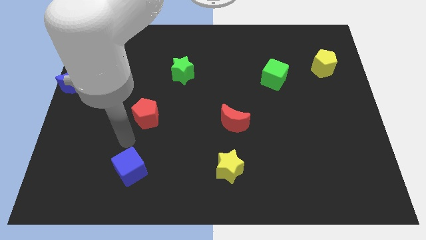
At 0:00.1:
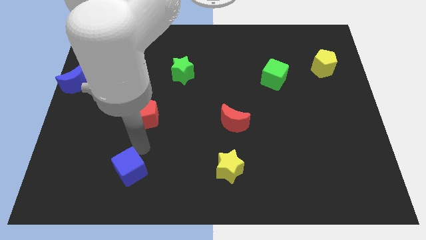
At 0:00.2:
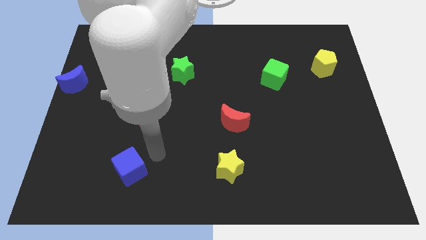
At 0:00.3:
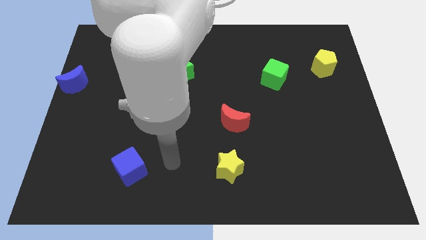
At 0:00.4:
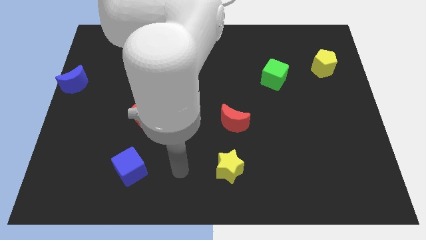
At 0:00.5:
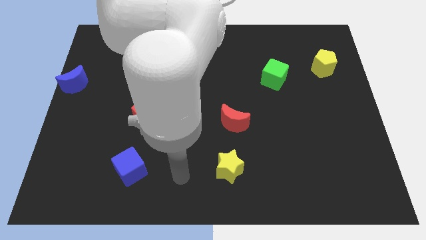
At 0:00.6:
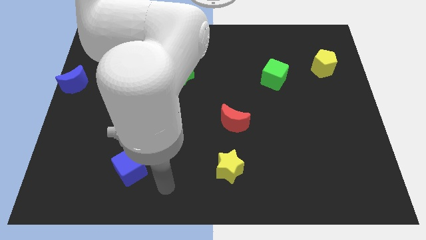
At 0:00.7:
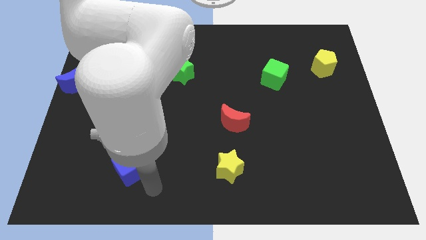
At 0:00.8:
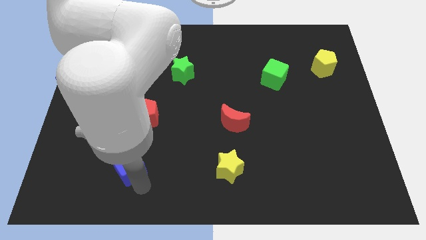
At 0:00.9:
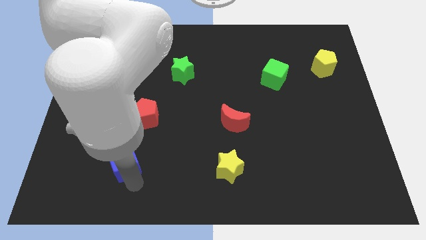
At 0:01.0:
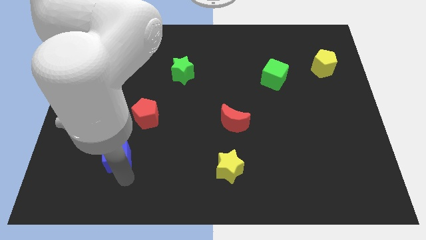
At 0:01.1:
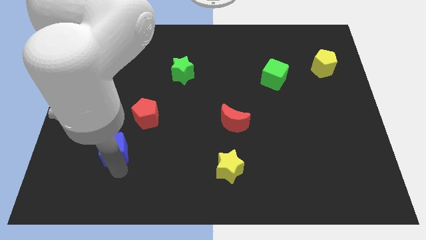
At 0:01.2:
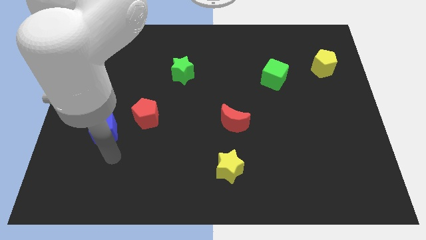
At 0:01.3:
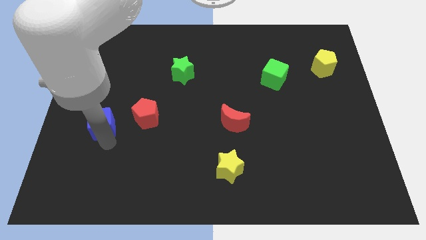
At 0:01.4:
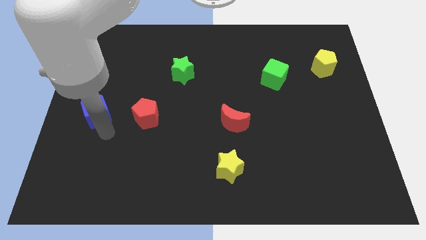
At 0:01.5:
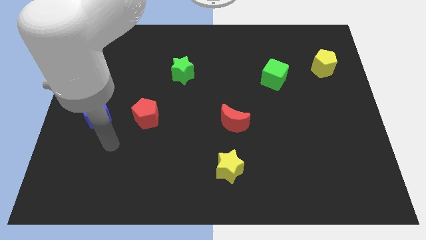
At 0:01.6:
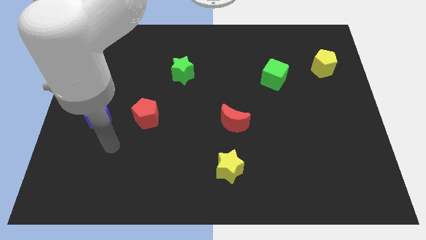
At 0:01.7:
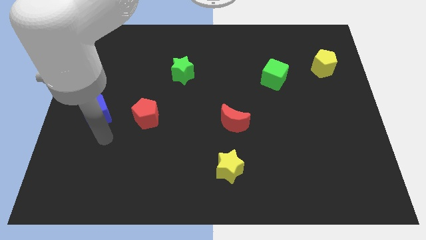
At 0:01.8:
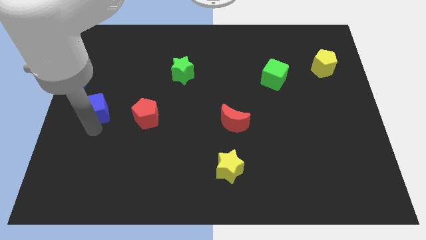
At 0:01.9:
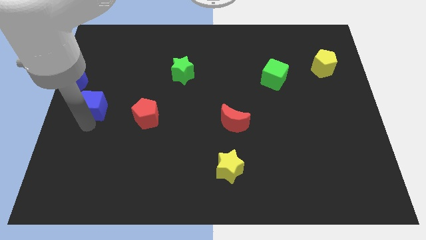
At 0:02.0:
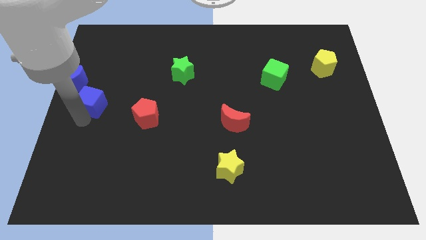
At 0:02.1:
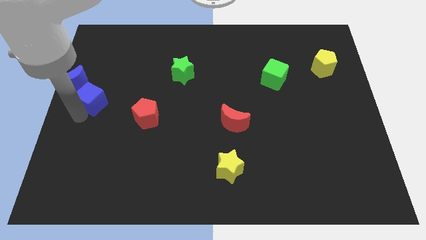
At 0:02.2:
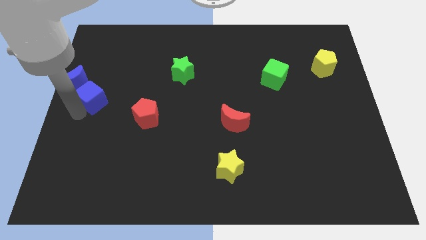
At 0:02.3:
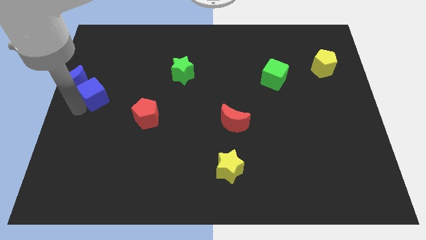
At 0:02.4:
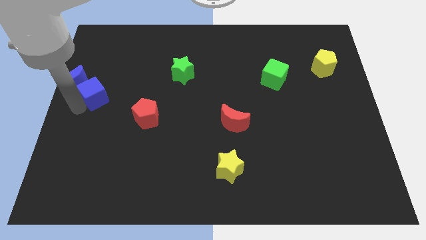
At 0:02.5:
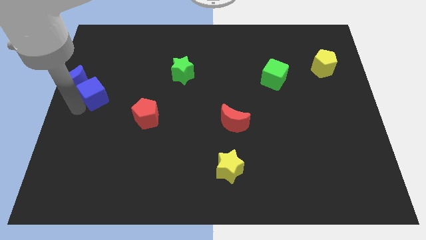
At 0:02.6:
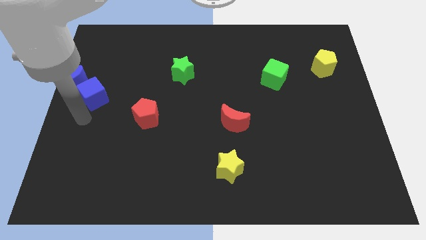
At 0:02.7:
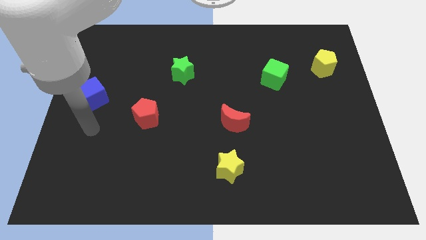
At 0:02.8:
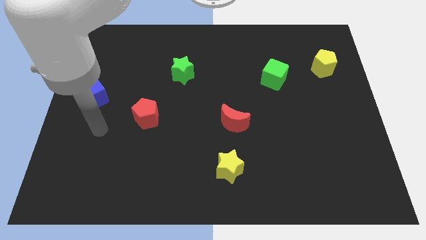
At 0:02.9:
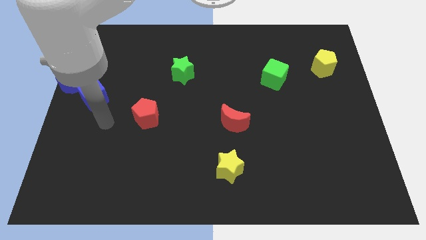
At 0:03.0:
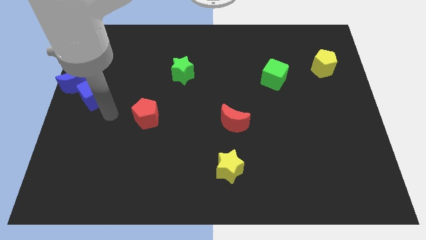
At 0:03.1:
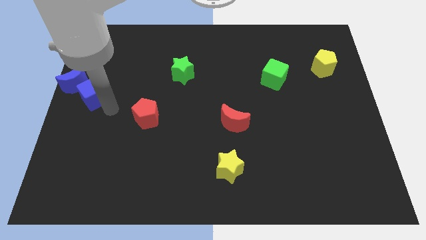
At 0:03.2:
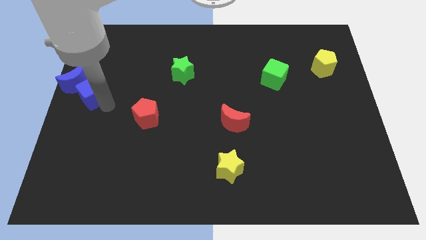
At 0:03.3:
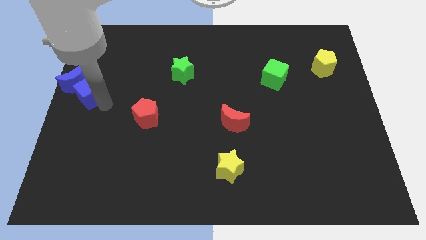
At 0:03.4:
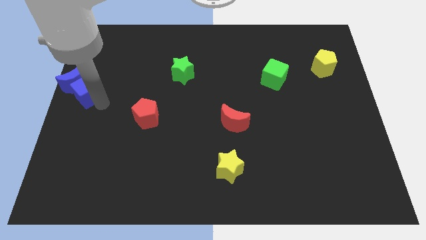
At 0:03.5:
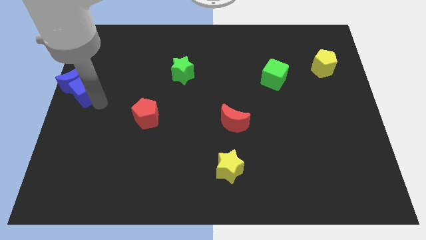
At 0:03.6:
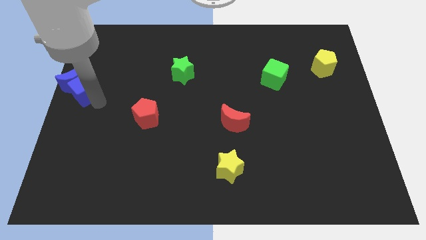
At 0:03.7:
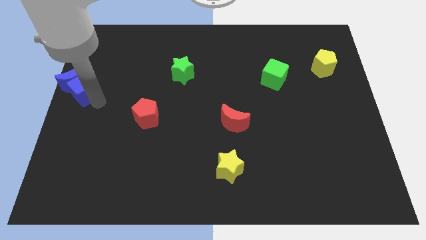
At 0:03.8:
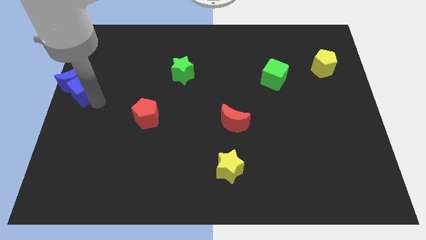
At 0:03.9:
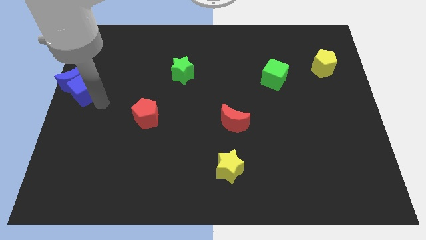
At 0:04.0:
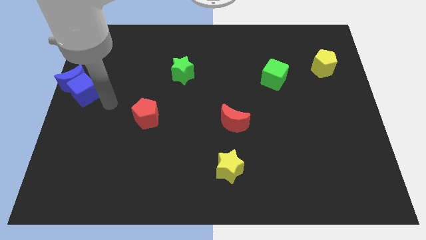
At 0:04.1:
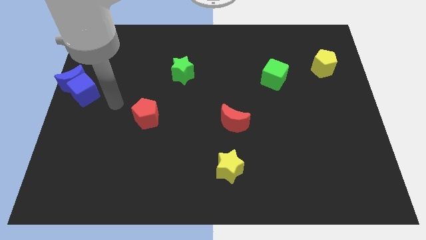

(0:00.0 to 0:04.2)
move the blue cube into the blue crescent

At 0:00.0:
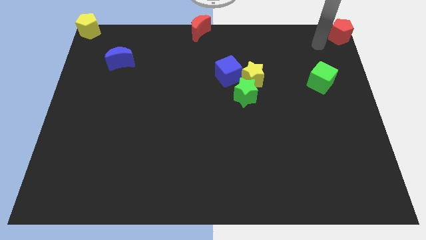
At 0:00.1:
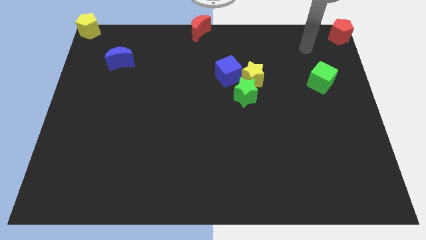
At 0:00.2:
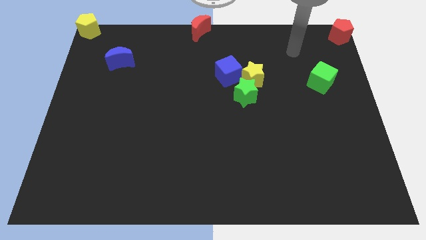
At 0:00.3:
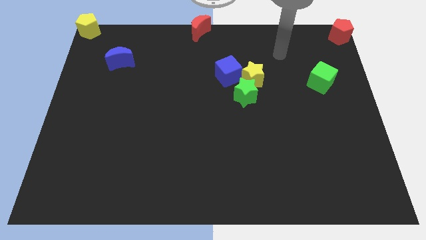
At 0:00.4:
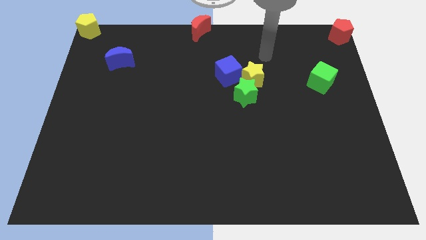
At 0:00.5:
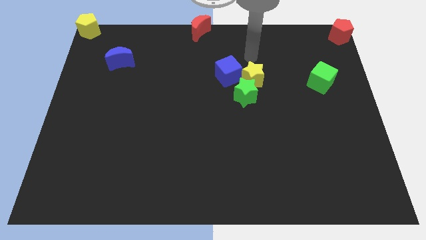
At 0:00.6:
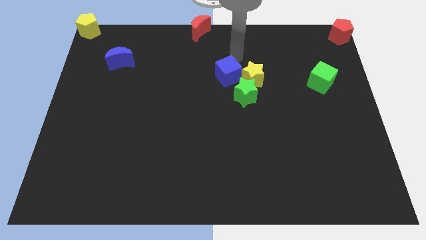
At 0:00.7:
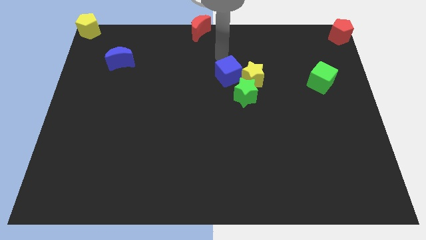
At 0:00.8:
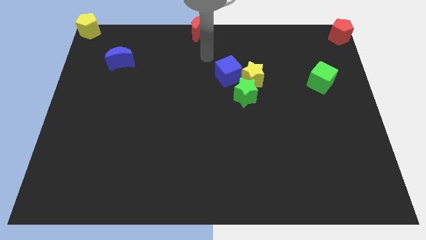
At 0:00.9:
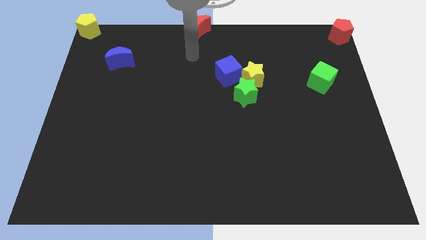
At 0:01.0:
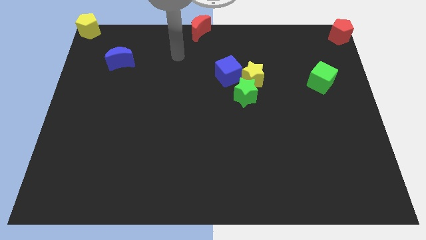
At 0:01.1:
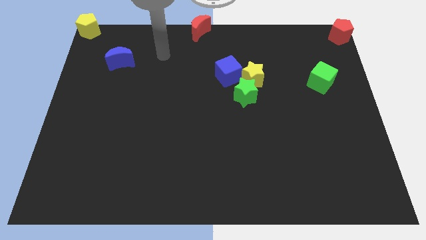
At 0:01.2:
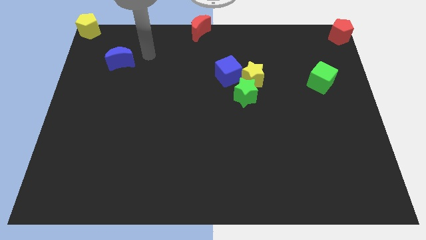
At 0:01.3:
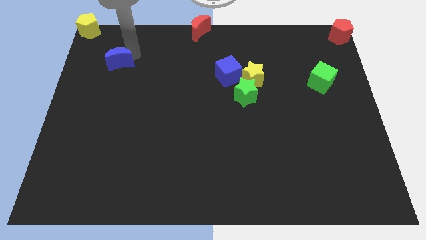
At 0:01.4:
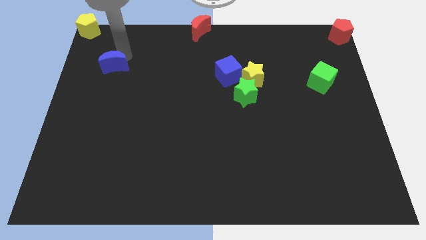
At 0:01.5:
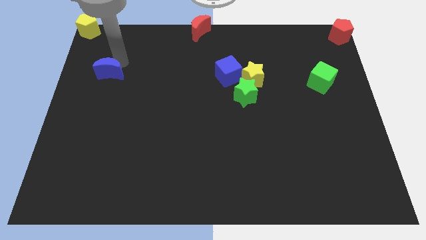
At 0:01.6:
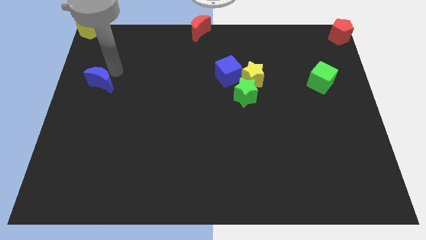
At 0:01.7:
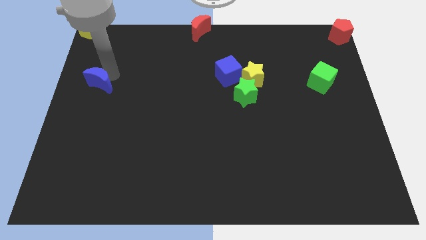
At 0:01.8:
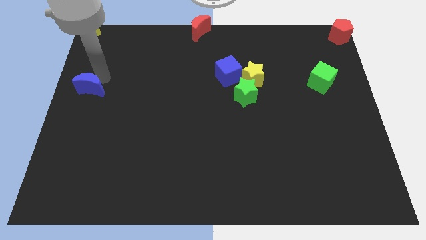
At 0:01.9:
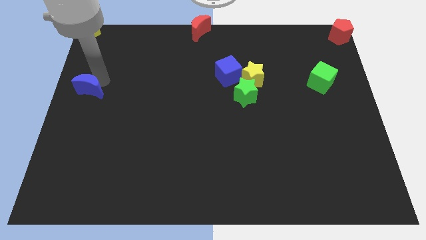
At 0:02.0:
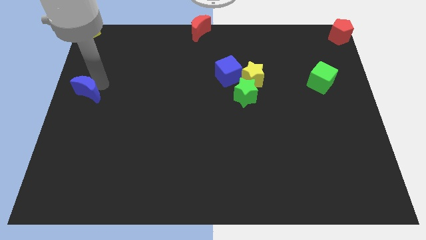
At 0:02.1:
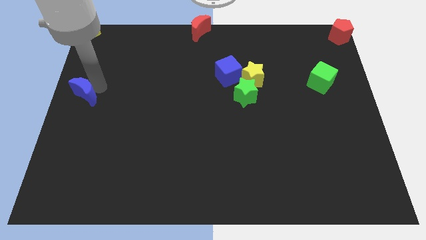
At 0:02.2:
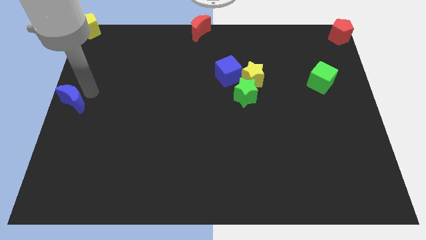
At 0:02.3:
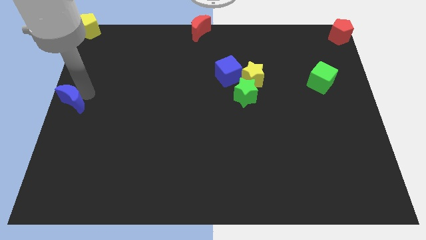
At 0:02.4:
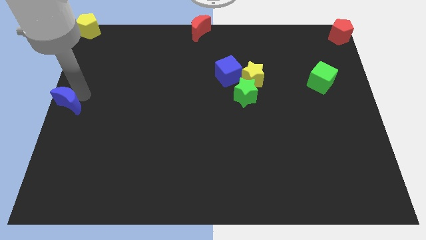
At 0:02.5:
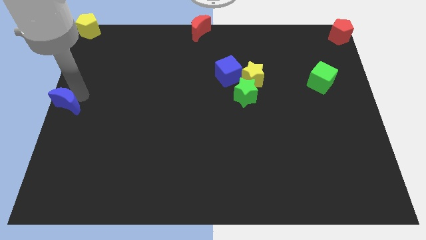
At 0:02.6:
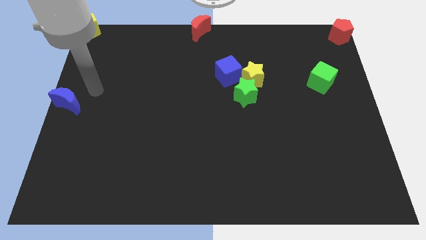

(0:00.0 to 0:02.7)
place blue crescent below yellow pentagon

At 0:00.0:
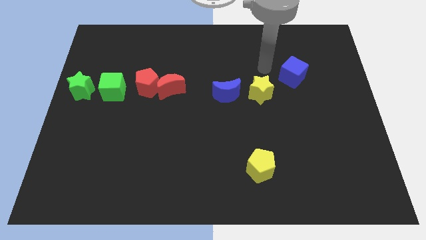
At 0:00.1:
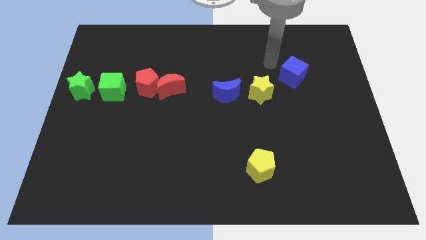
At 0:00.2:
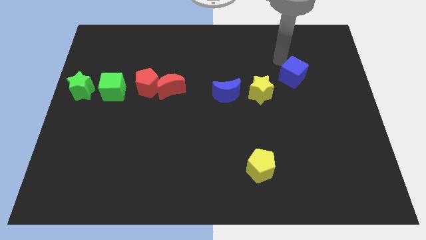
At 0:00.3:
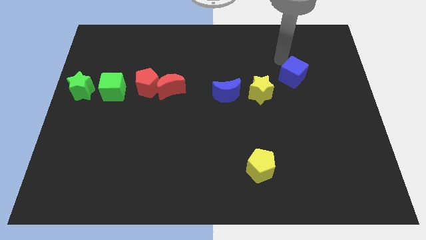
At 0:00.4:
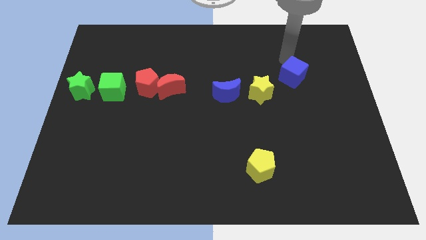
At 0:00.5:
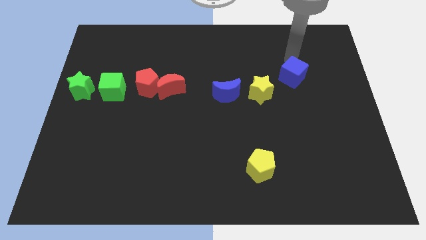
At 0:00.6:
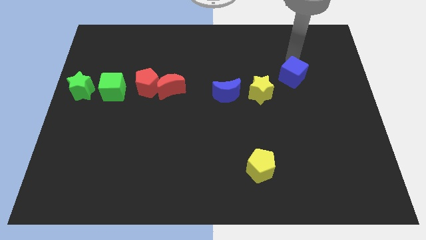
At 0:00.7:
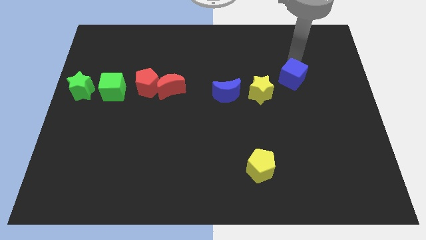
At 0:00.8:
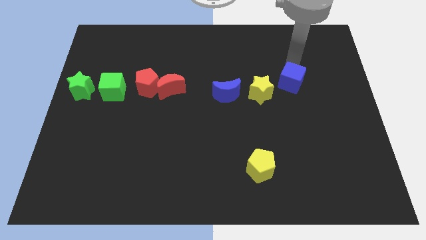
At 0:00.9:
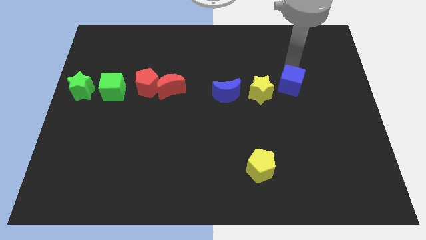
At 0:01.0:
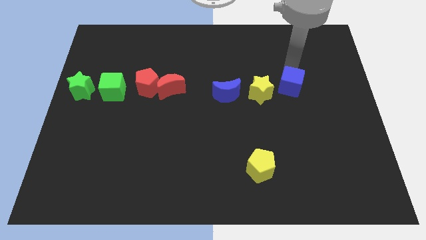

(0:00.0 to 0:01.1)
slightly push the blue cube down

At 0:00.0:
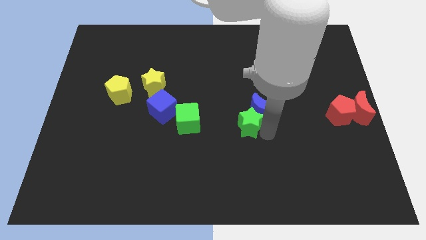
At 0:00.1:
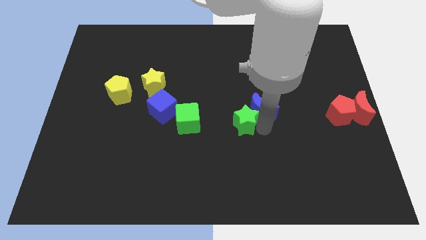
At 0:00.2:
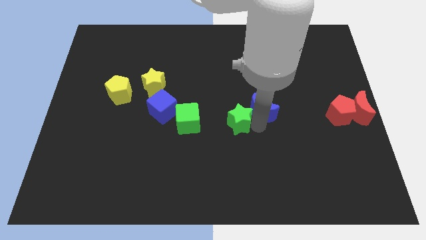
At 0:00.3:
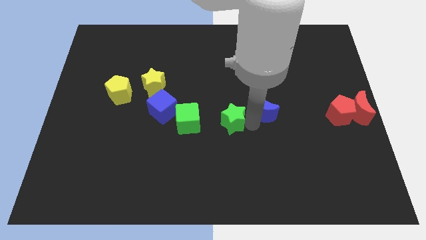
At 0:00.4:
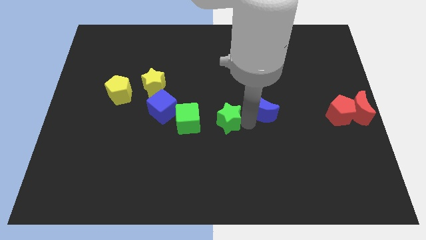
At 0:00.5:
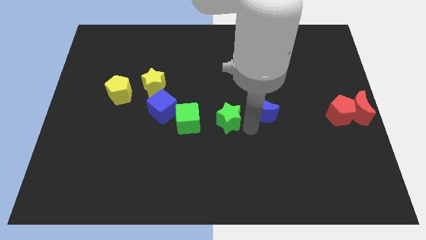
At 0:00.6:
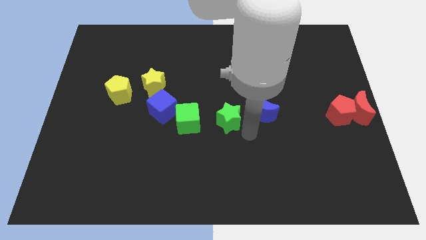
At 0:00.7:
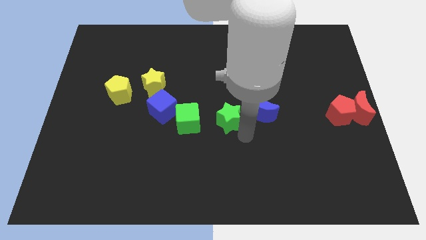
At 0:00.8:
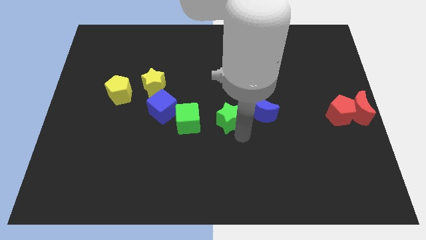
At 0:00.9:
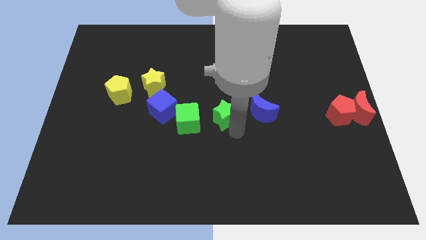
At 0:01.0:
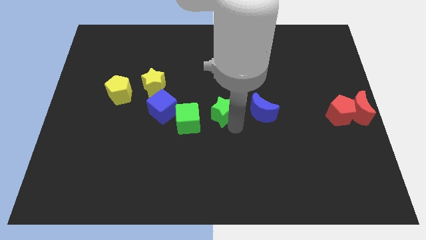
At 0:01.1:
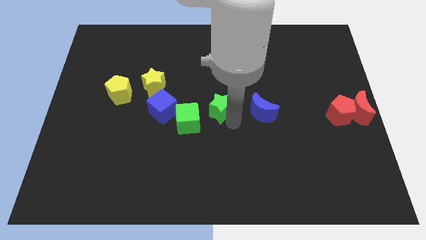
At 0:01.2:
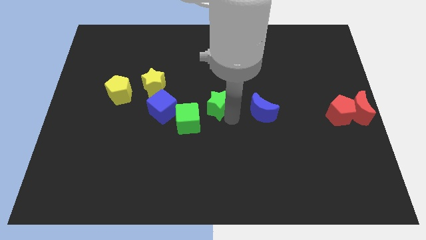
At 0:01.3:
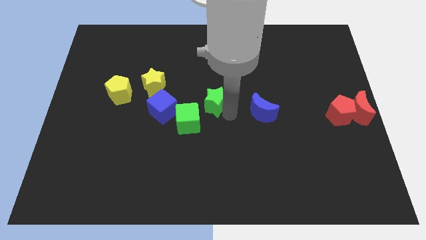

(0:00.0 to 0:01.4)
separate green star from green cube
